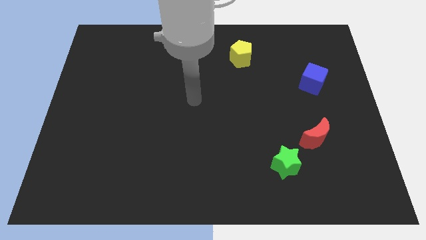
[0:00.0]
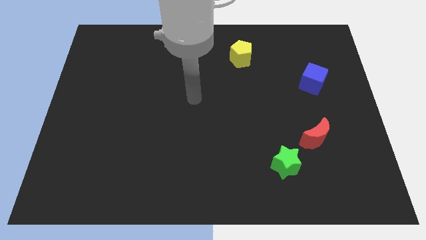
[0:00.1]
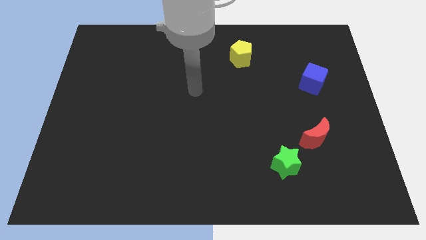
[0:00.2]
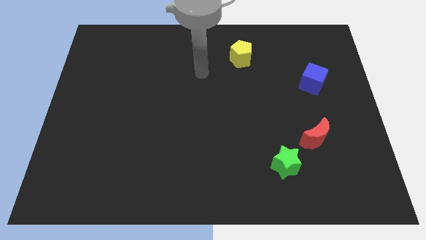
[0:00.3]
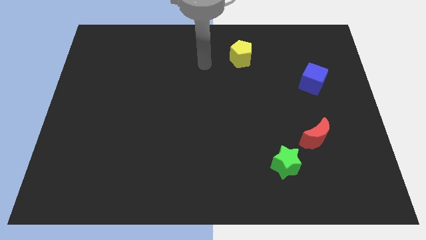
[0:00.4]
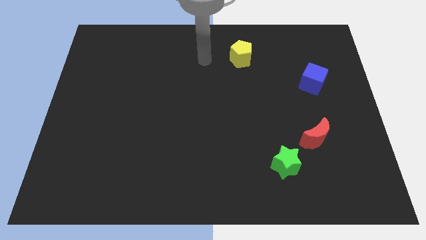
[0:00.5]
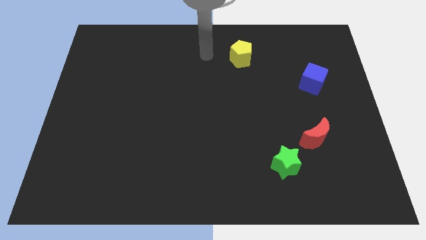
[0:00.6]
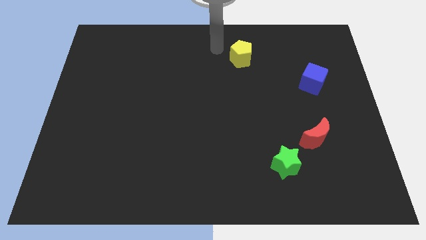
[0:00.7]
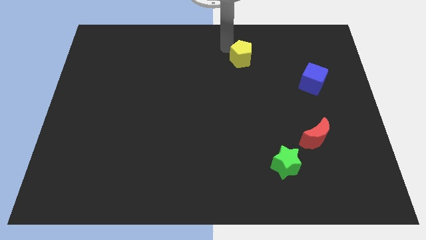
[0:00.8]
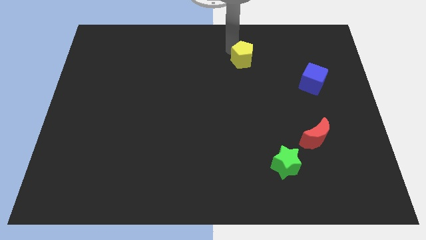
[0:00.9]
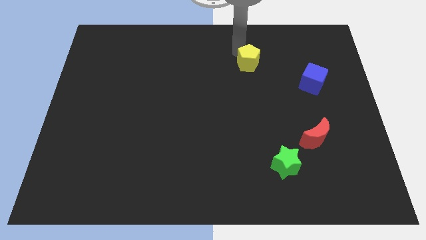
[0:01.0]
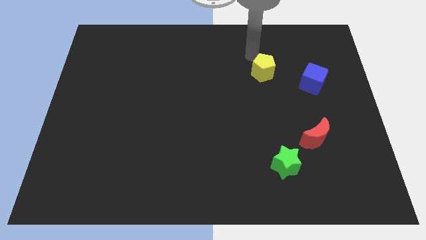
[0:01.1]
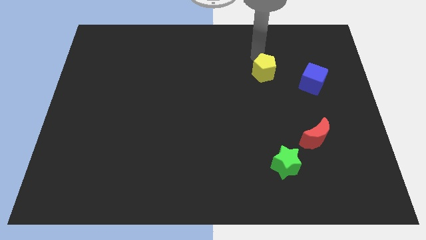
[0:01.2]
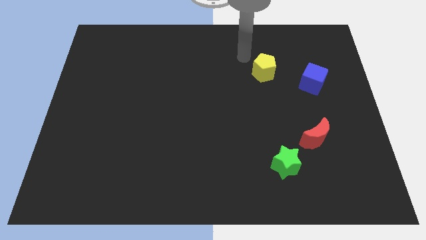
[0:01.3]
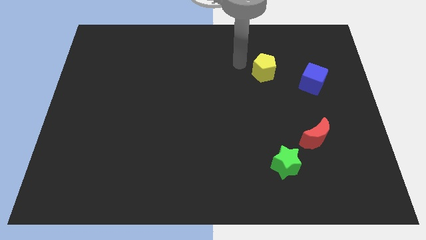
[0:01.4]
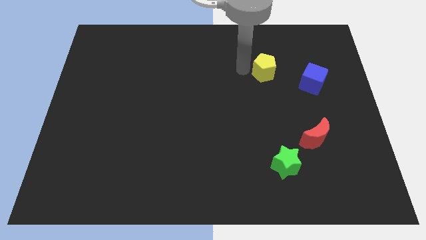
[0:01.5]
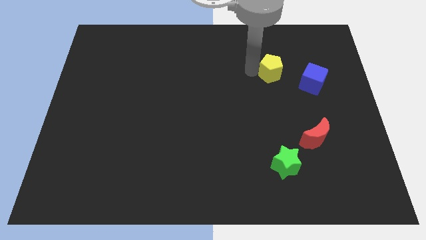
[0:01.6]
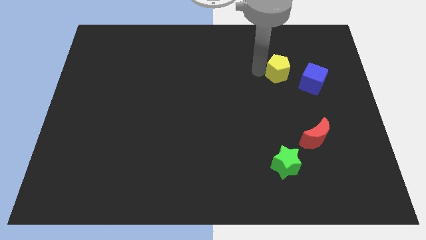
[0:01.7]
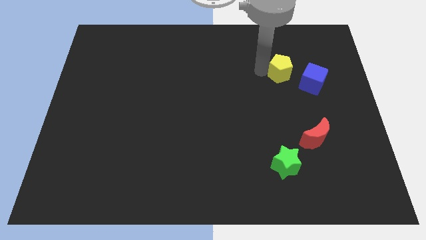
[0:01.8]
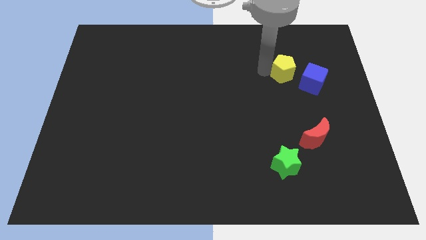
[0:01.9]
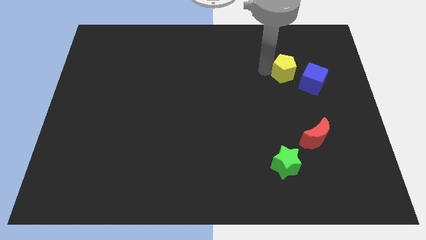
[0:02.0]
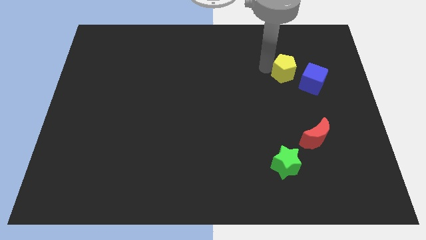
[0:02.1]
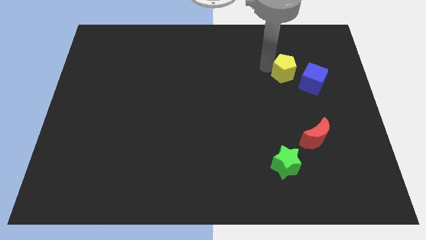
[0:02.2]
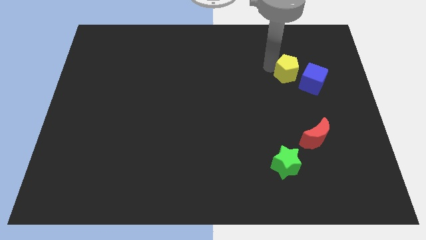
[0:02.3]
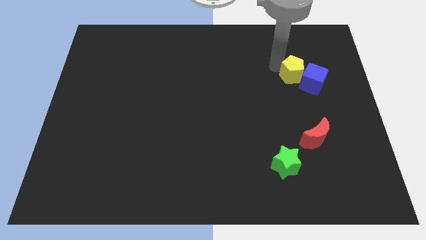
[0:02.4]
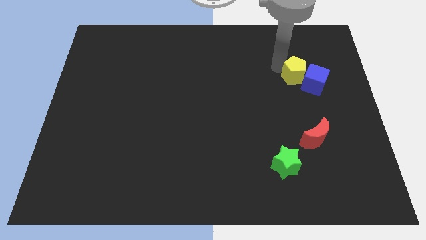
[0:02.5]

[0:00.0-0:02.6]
put the pentagon next to the blue cube

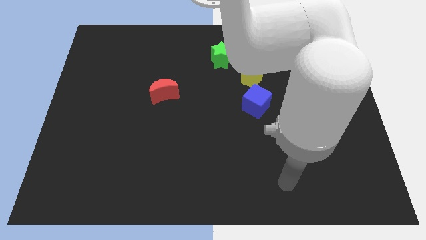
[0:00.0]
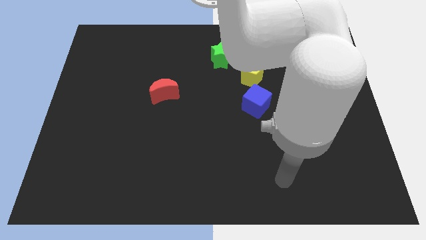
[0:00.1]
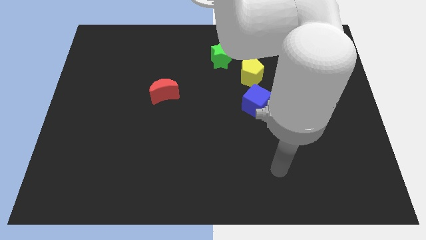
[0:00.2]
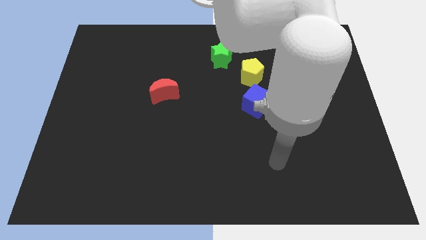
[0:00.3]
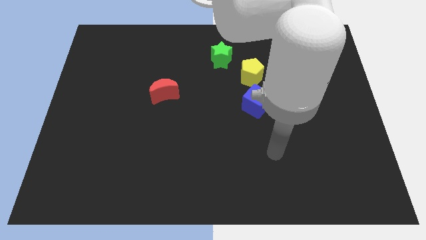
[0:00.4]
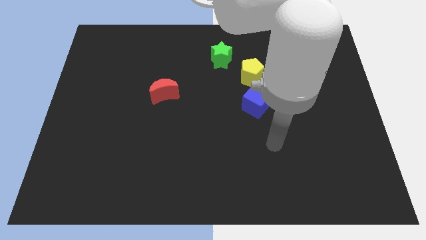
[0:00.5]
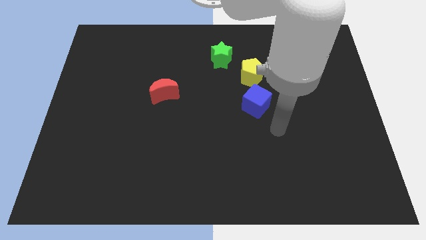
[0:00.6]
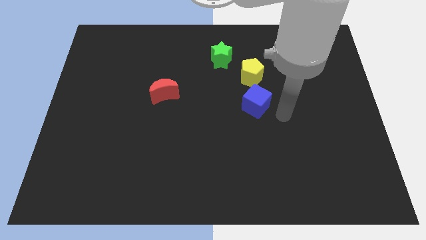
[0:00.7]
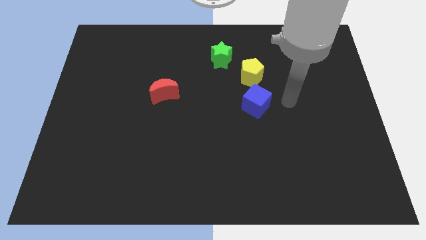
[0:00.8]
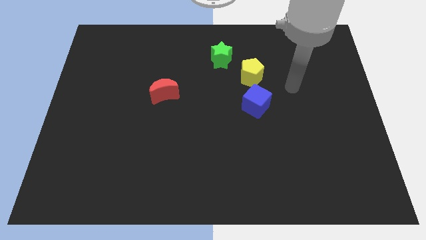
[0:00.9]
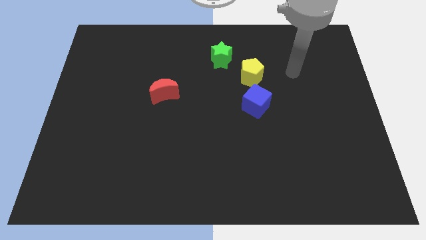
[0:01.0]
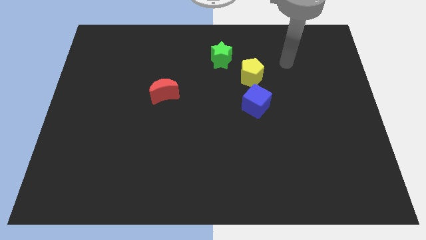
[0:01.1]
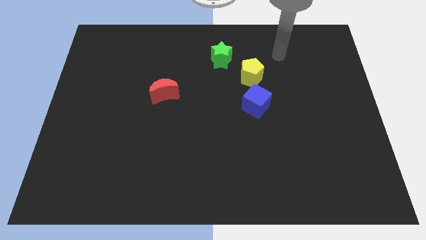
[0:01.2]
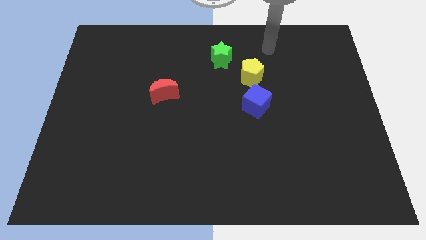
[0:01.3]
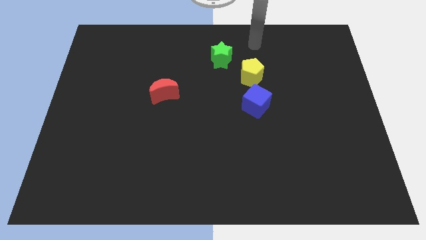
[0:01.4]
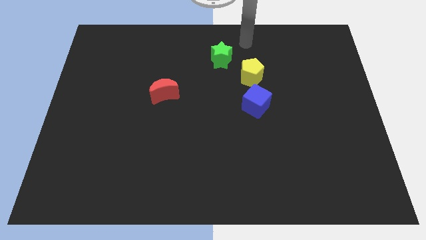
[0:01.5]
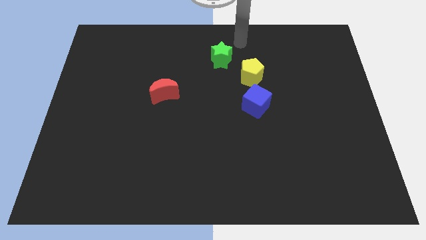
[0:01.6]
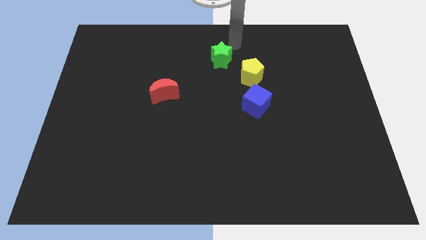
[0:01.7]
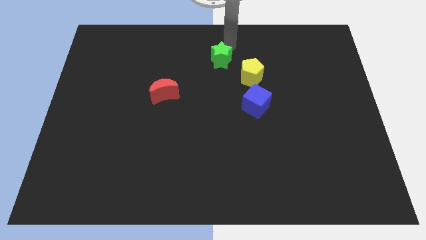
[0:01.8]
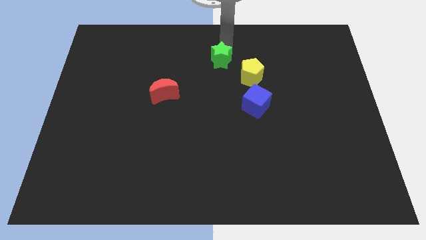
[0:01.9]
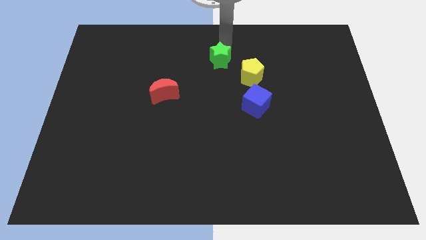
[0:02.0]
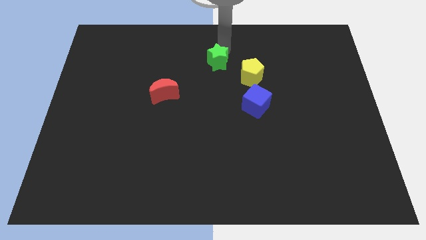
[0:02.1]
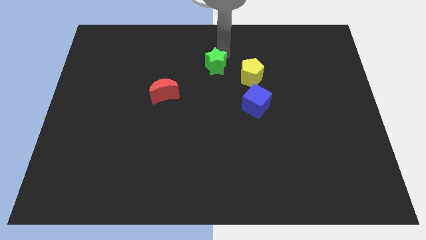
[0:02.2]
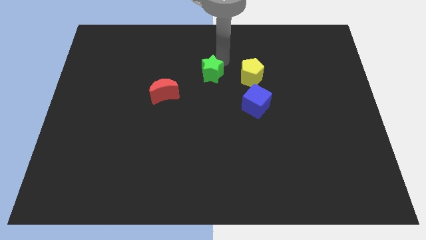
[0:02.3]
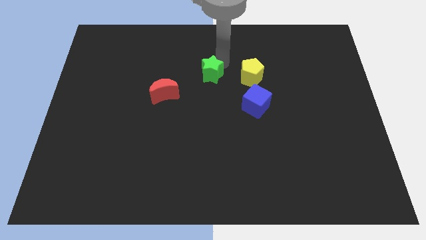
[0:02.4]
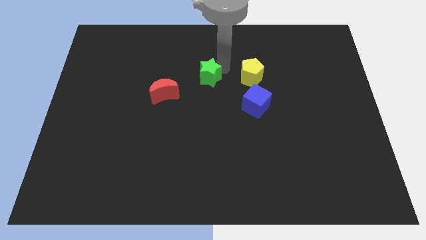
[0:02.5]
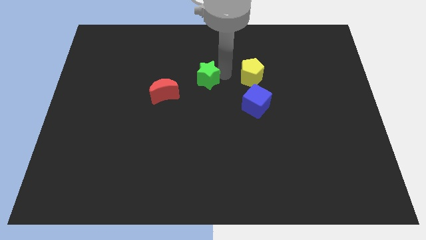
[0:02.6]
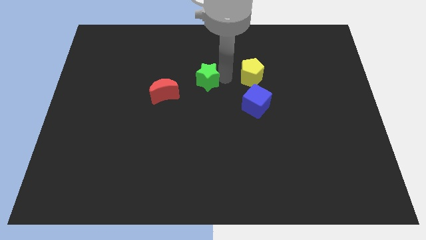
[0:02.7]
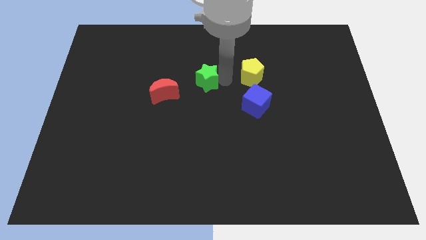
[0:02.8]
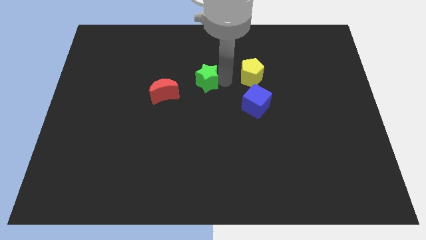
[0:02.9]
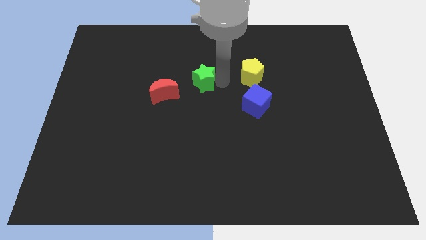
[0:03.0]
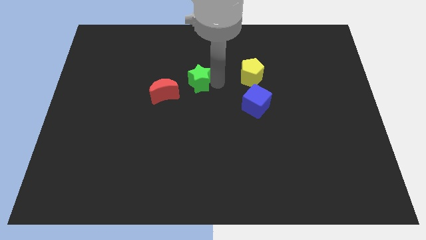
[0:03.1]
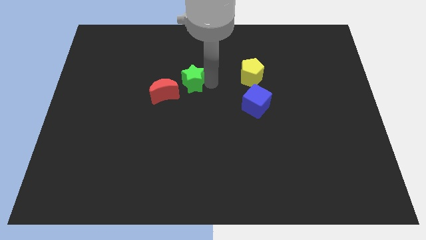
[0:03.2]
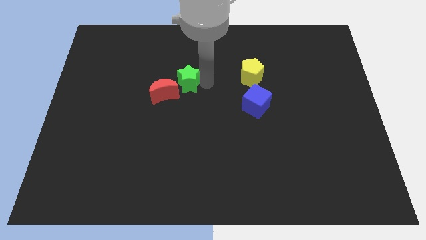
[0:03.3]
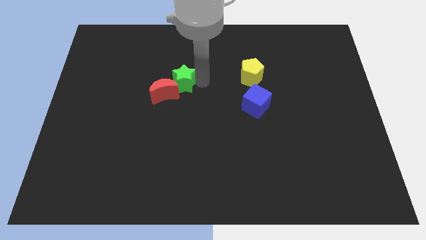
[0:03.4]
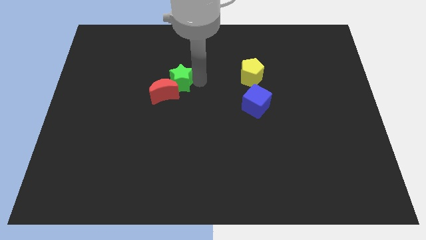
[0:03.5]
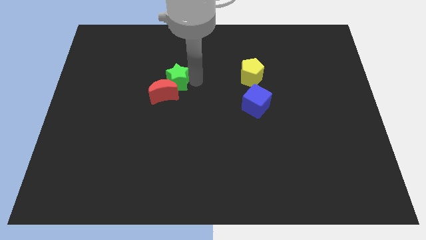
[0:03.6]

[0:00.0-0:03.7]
move the green block close to the red moon

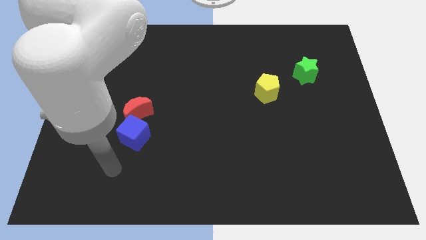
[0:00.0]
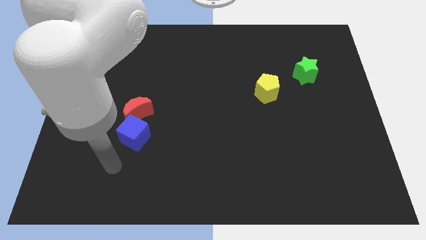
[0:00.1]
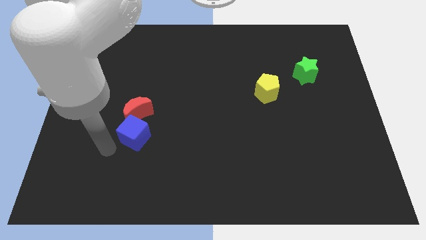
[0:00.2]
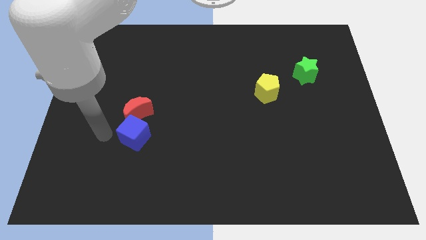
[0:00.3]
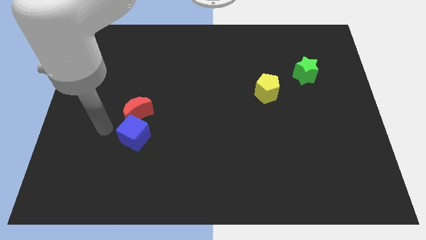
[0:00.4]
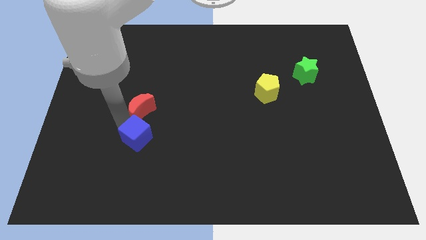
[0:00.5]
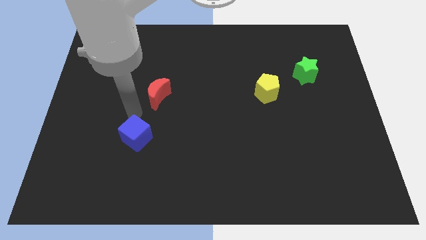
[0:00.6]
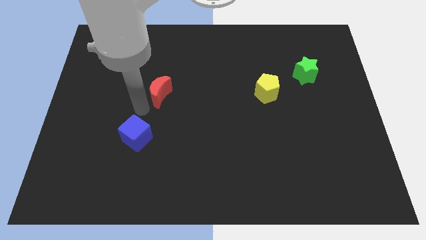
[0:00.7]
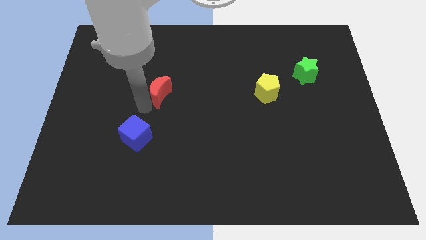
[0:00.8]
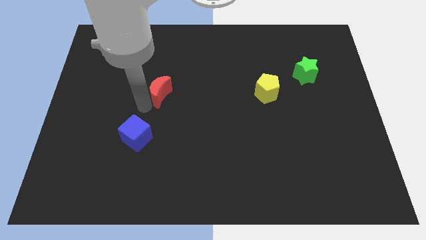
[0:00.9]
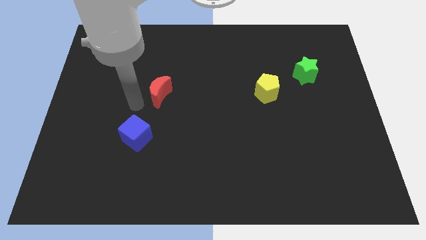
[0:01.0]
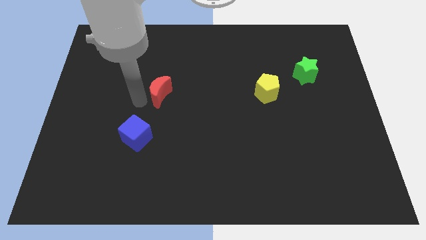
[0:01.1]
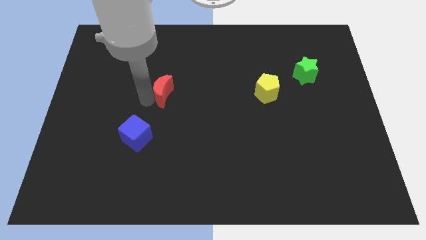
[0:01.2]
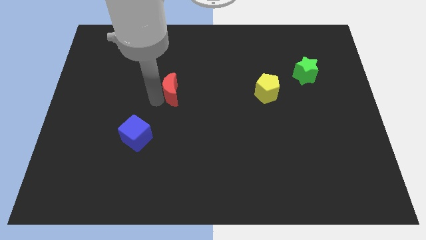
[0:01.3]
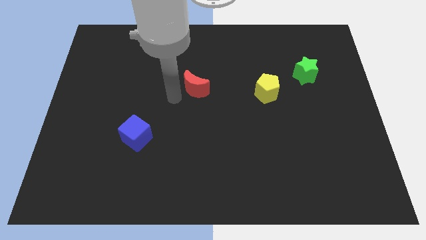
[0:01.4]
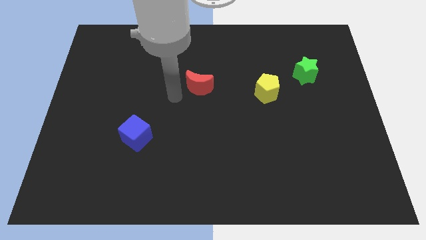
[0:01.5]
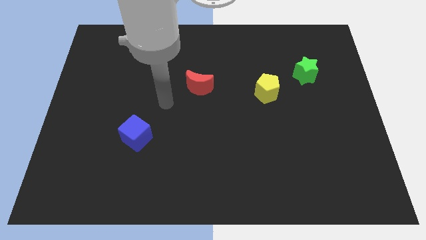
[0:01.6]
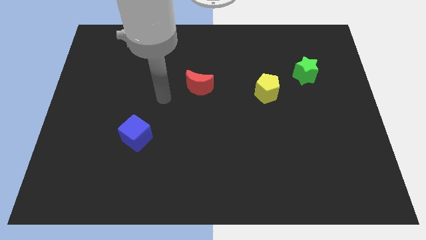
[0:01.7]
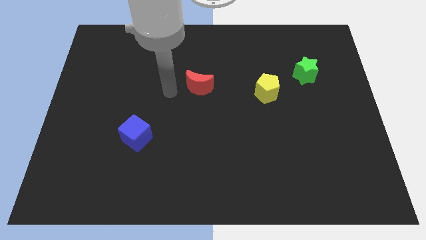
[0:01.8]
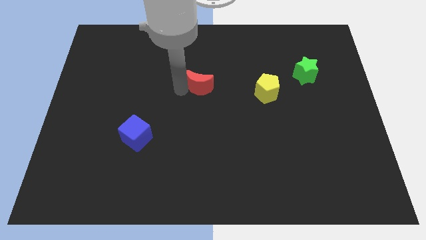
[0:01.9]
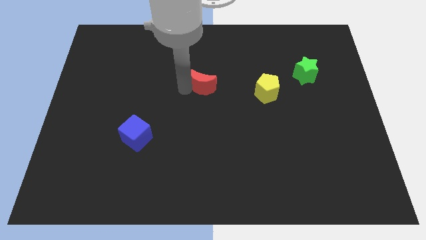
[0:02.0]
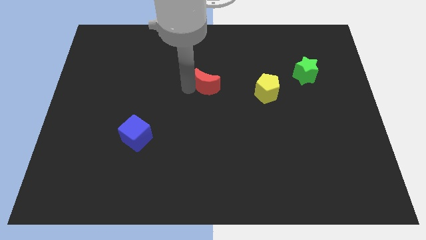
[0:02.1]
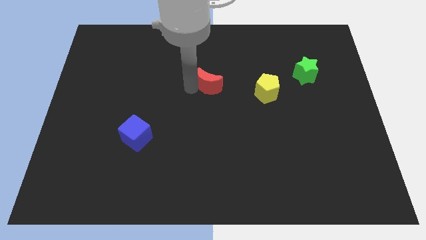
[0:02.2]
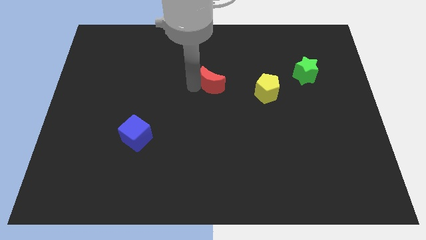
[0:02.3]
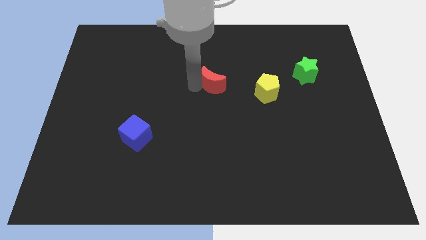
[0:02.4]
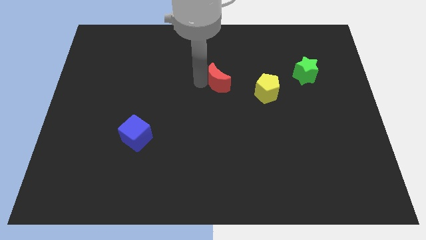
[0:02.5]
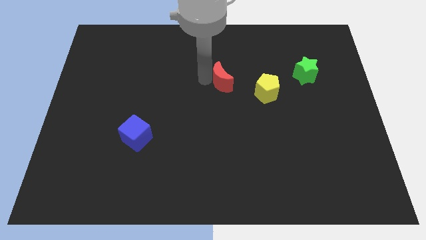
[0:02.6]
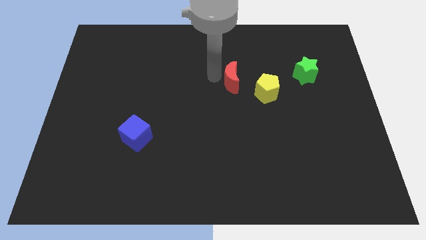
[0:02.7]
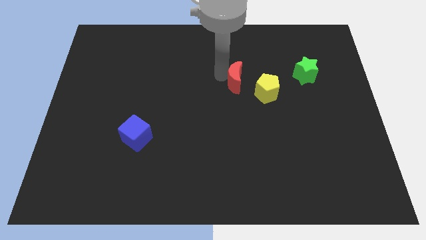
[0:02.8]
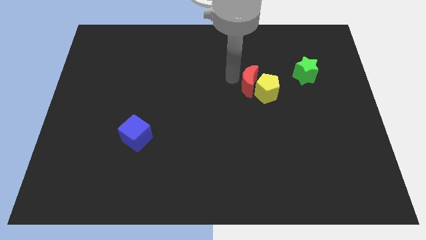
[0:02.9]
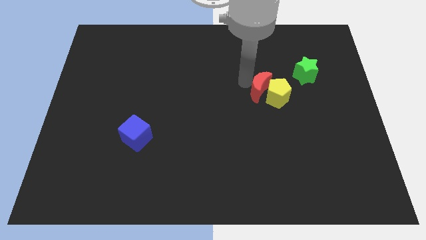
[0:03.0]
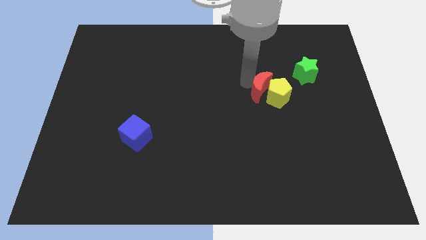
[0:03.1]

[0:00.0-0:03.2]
slide the red moon towards the pentagon
